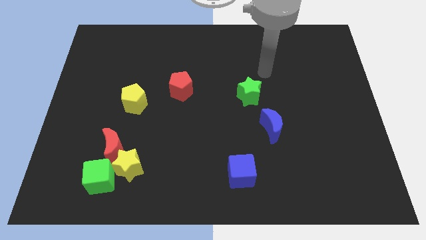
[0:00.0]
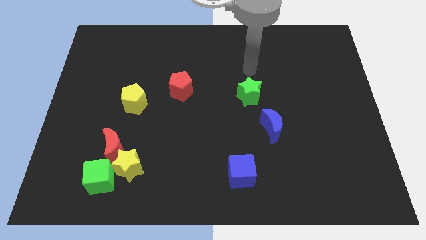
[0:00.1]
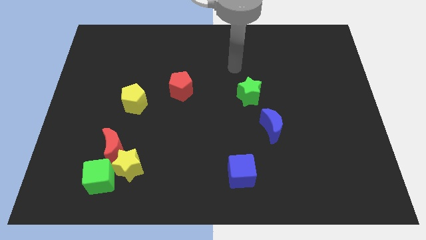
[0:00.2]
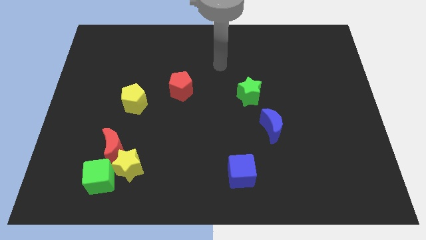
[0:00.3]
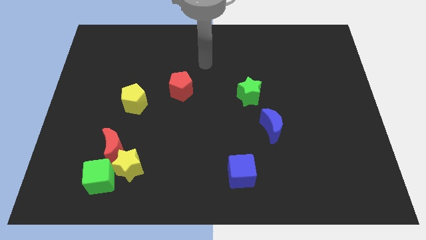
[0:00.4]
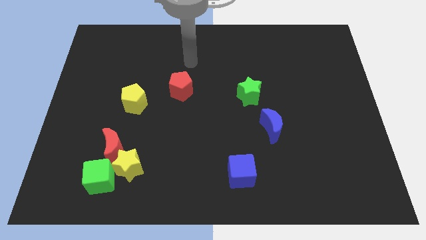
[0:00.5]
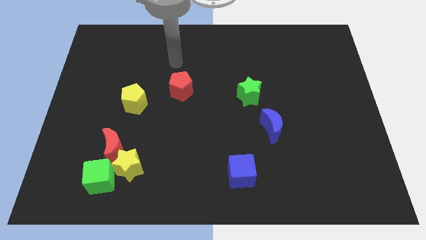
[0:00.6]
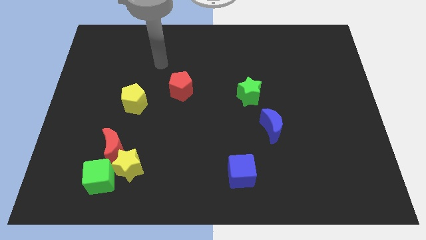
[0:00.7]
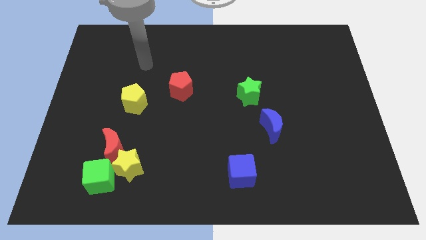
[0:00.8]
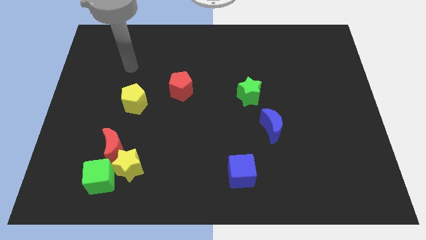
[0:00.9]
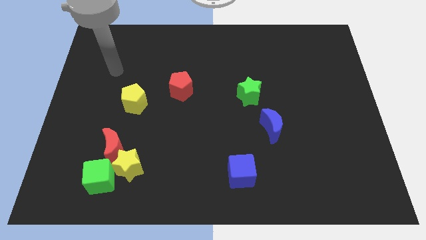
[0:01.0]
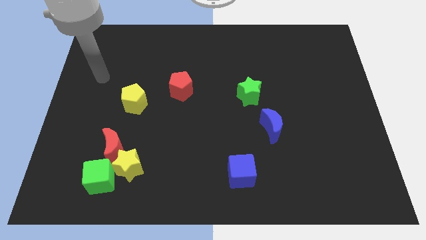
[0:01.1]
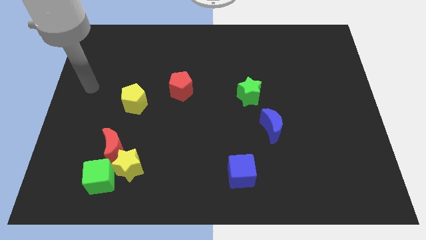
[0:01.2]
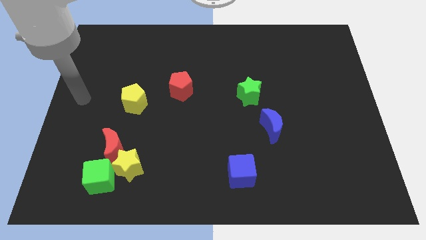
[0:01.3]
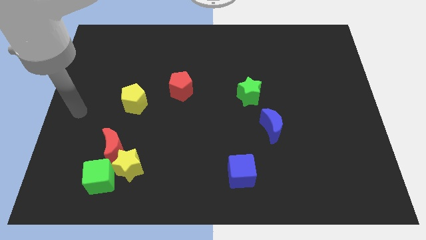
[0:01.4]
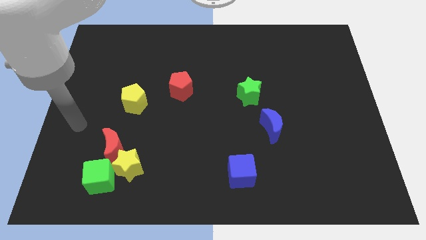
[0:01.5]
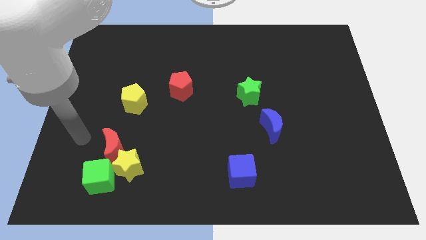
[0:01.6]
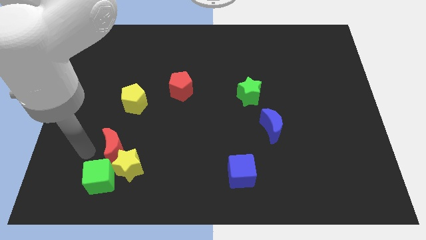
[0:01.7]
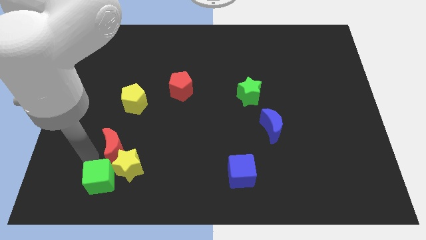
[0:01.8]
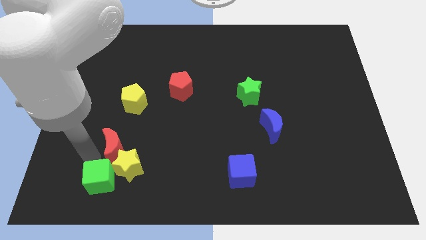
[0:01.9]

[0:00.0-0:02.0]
move your arm towards left to the red crescent

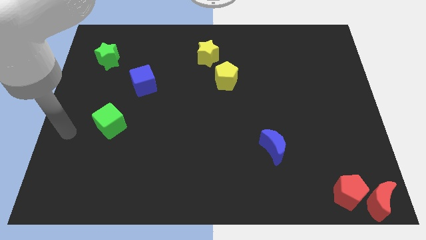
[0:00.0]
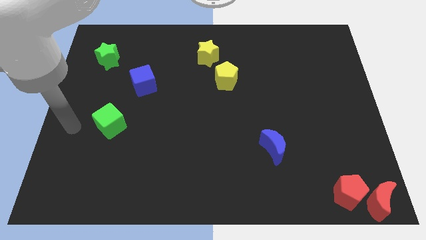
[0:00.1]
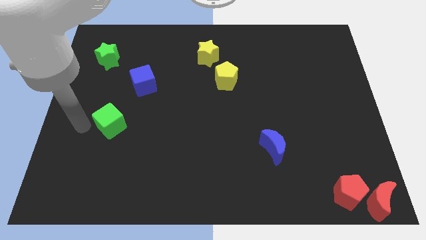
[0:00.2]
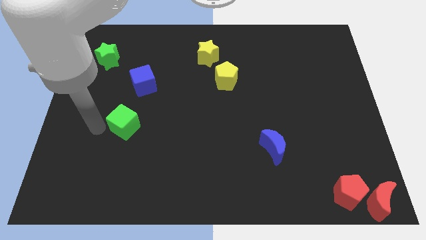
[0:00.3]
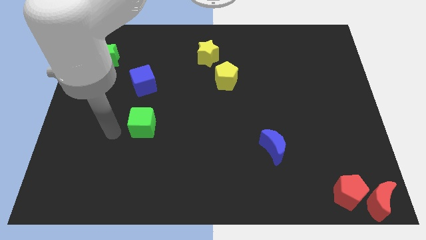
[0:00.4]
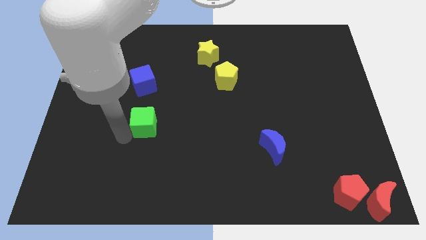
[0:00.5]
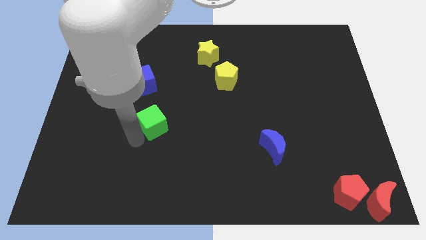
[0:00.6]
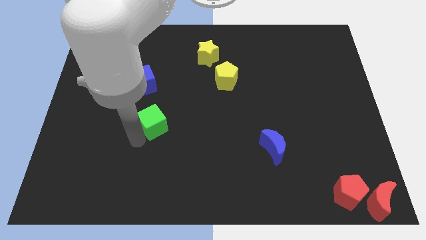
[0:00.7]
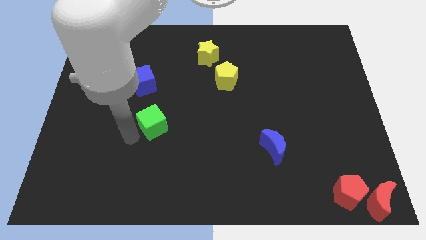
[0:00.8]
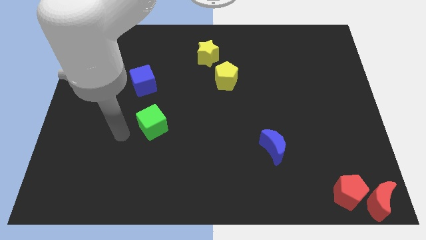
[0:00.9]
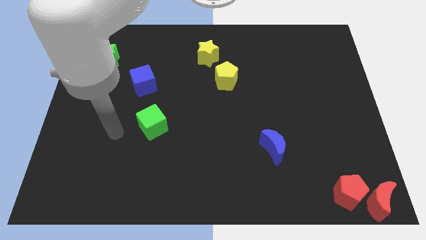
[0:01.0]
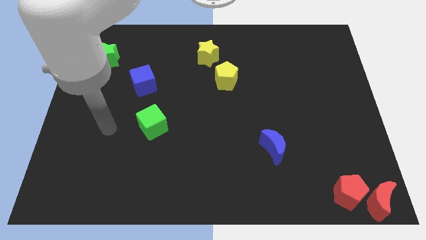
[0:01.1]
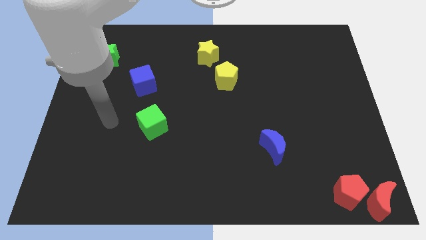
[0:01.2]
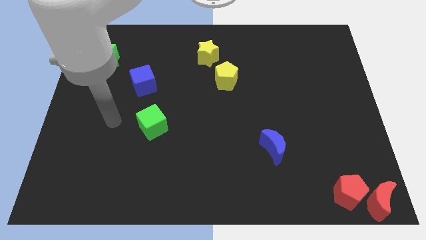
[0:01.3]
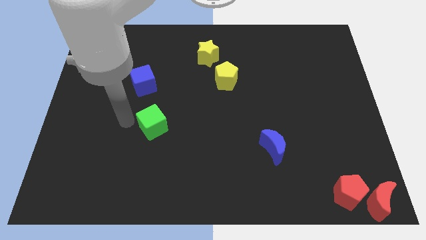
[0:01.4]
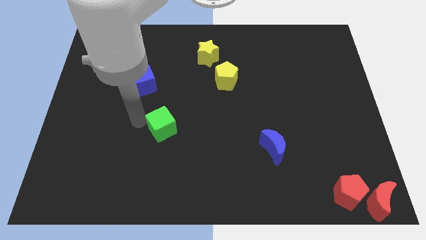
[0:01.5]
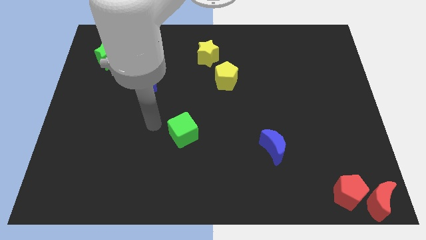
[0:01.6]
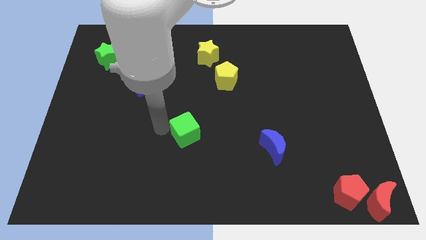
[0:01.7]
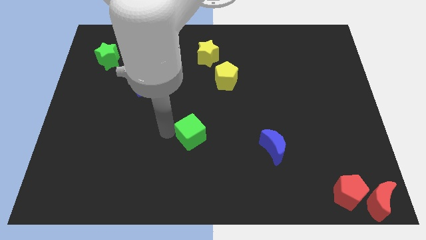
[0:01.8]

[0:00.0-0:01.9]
move green cube to center of board

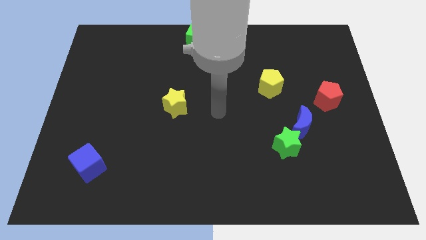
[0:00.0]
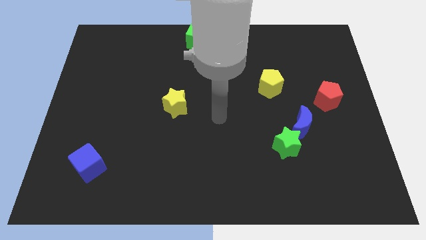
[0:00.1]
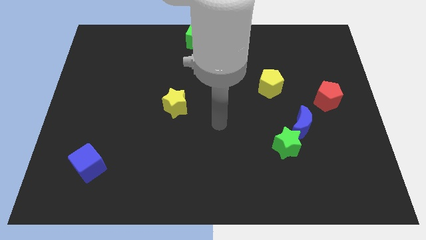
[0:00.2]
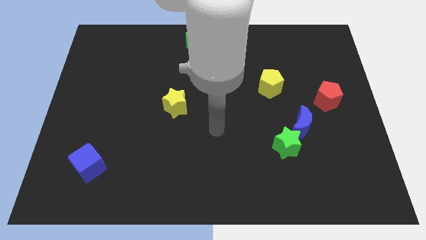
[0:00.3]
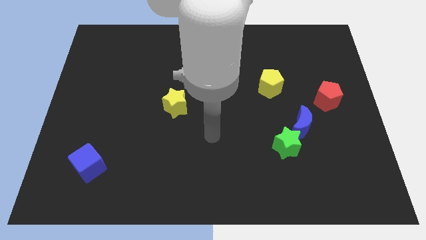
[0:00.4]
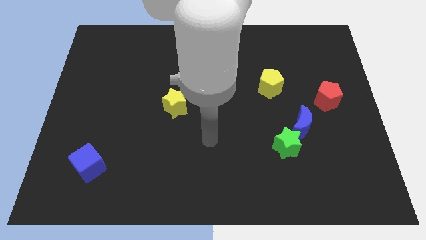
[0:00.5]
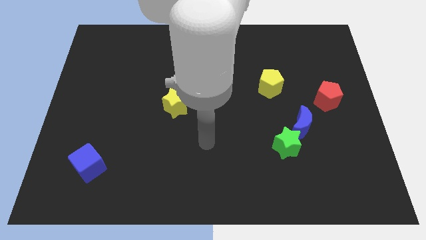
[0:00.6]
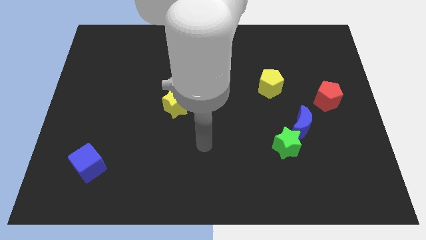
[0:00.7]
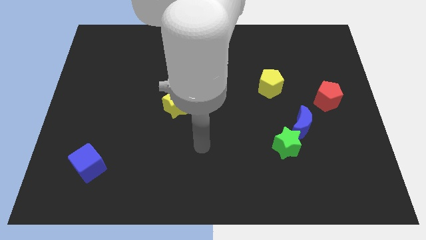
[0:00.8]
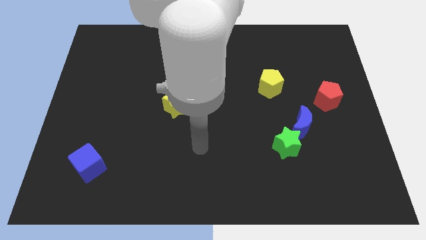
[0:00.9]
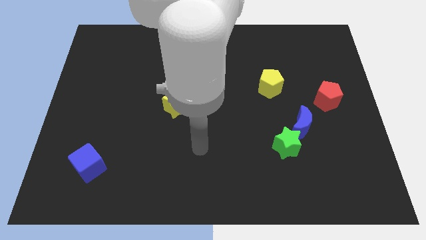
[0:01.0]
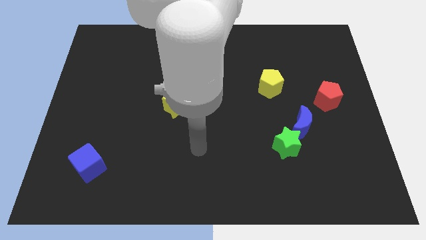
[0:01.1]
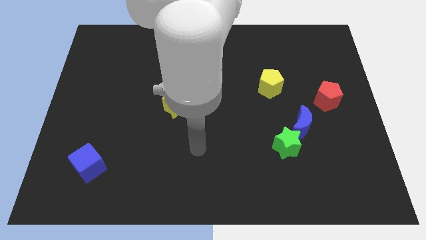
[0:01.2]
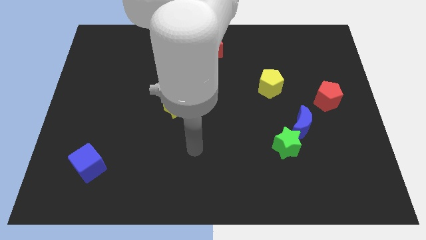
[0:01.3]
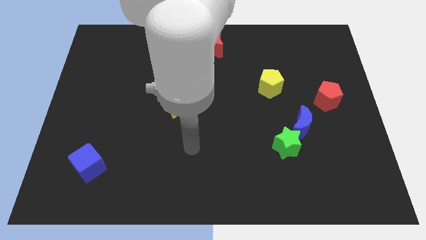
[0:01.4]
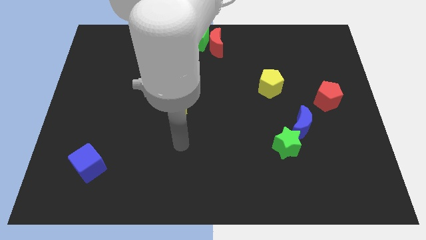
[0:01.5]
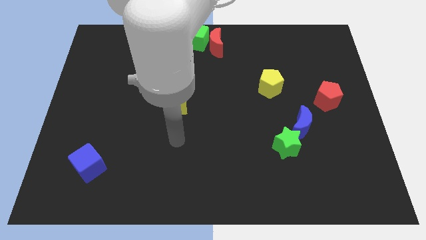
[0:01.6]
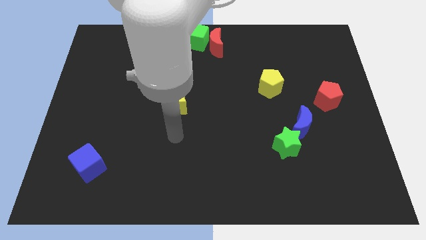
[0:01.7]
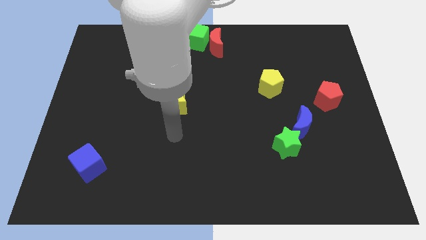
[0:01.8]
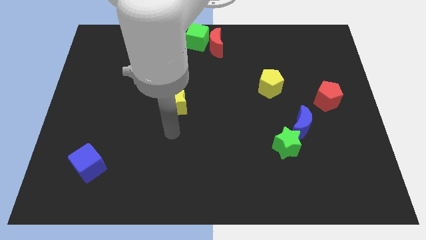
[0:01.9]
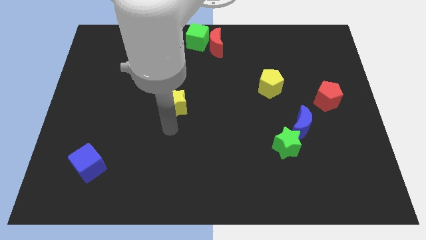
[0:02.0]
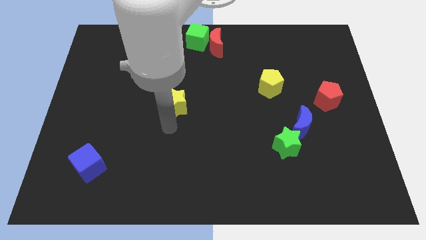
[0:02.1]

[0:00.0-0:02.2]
place your arm to the bottom of the yellow star

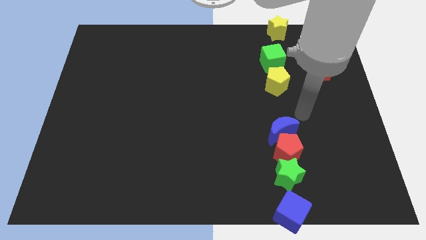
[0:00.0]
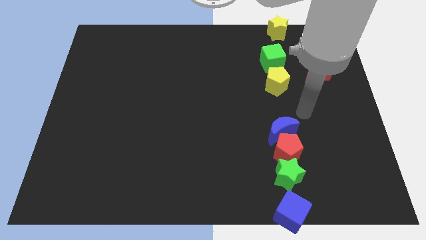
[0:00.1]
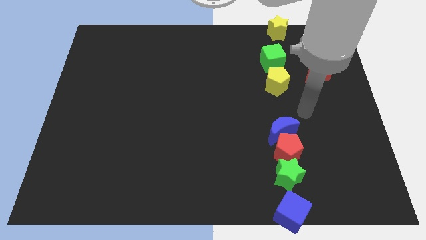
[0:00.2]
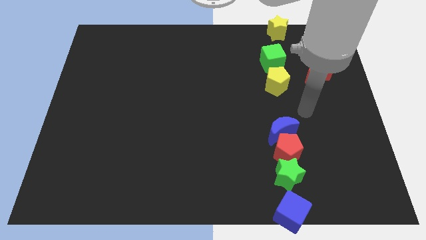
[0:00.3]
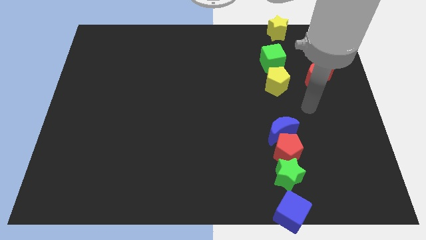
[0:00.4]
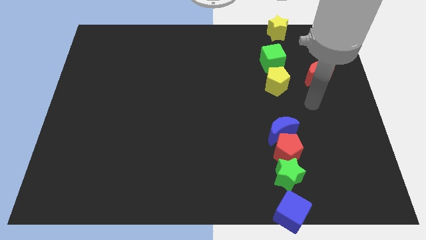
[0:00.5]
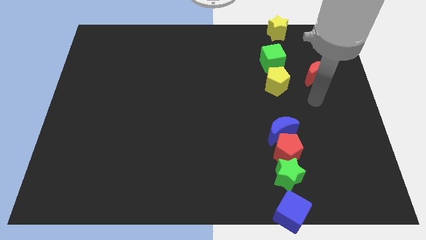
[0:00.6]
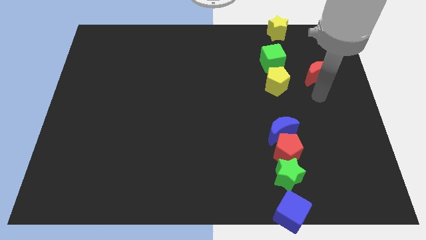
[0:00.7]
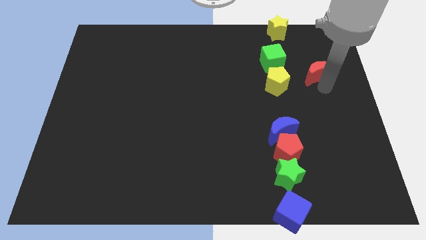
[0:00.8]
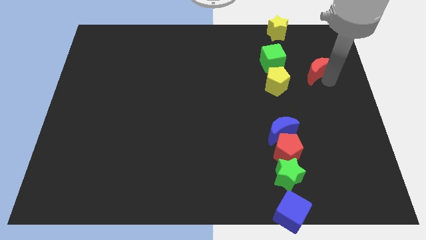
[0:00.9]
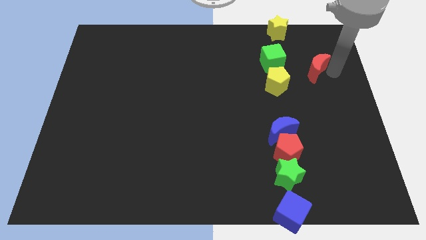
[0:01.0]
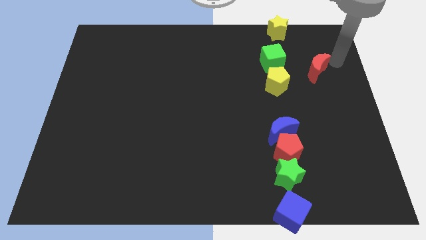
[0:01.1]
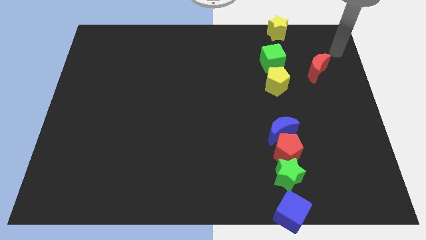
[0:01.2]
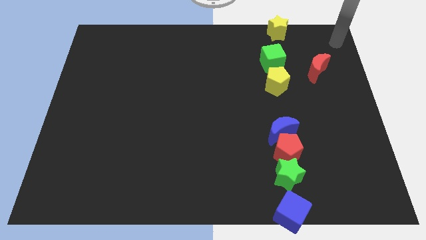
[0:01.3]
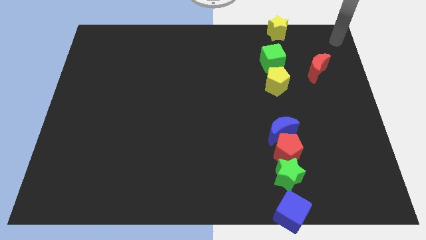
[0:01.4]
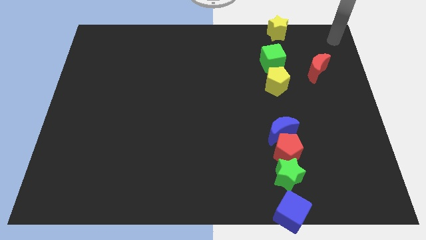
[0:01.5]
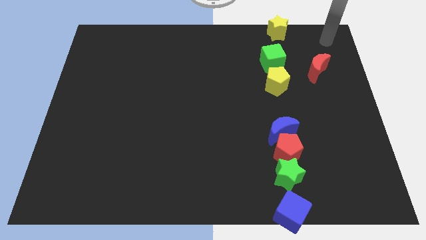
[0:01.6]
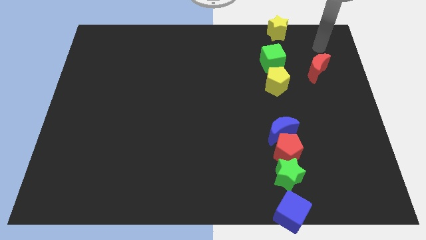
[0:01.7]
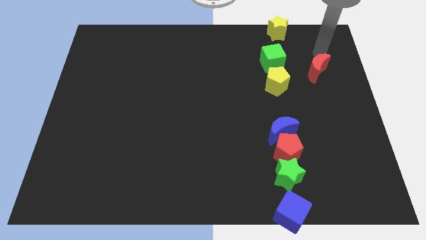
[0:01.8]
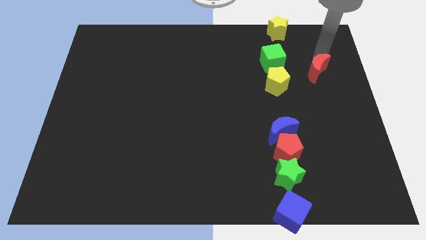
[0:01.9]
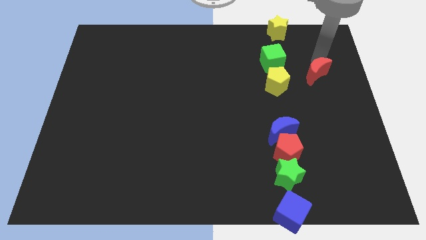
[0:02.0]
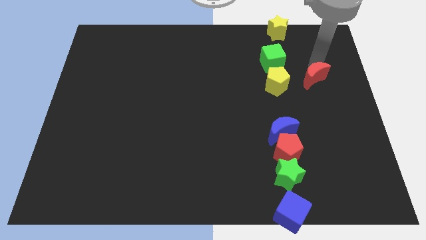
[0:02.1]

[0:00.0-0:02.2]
move the arm over the red crescent

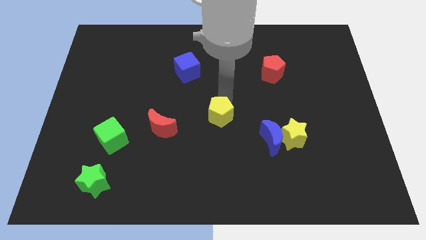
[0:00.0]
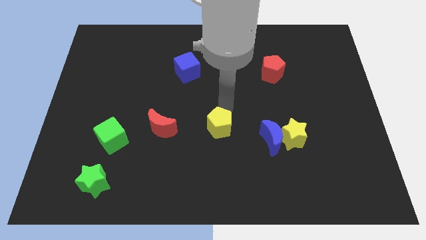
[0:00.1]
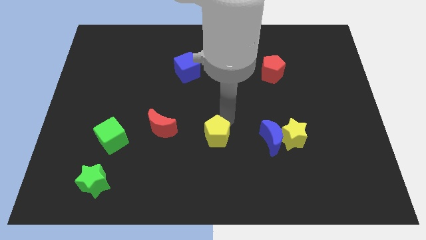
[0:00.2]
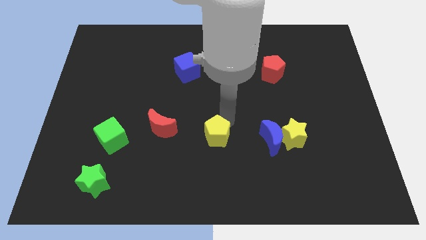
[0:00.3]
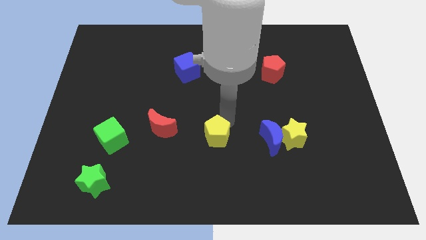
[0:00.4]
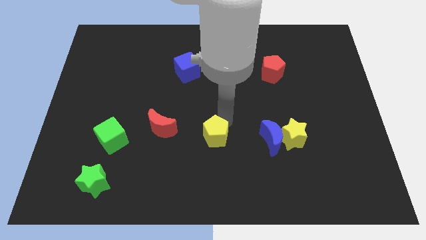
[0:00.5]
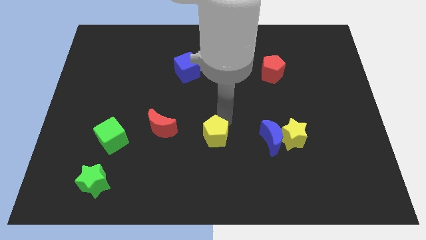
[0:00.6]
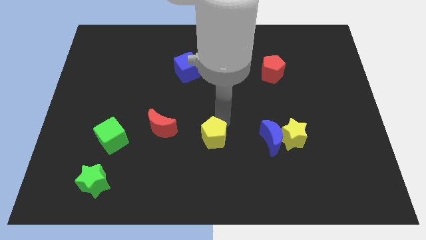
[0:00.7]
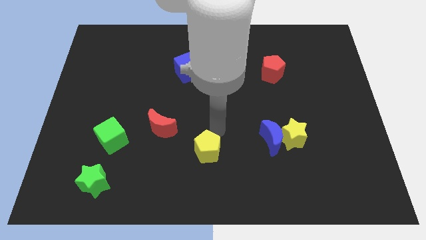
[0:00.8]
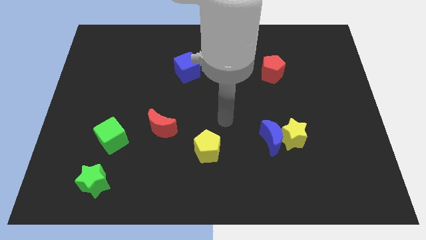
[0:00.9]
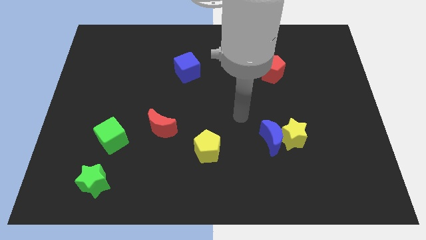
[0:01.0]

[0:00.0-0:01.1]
move yellow pentagon slightly down
